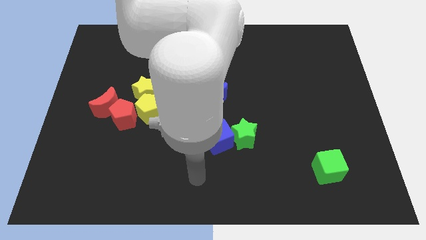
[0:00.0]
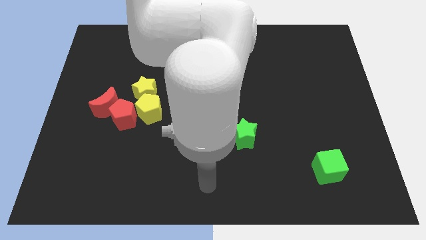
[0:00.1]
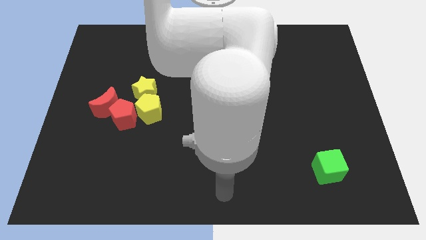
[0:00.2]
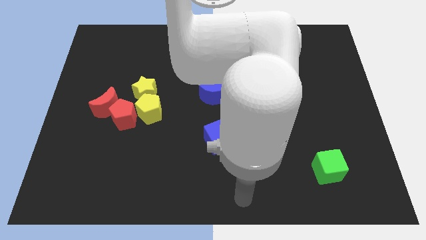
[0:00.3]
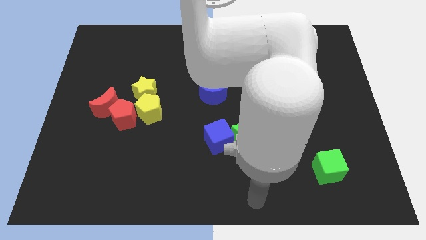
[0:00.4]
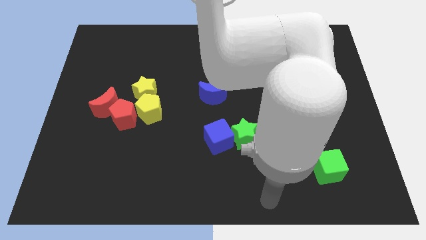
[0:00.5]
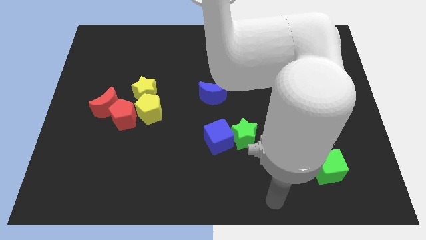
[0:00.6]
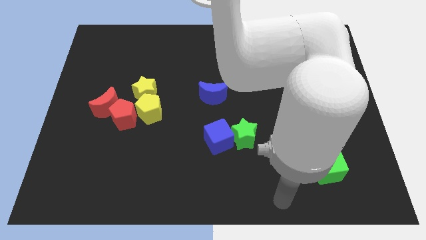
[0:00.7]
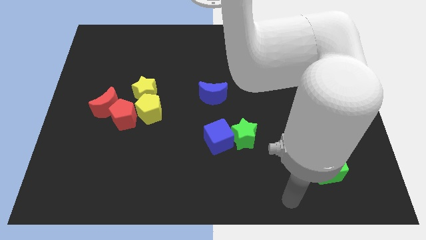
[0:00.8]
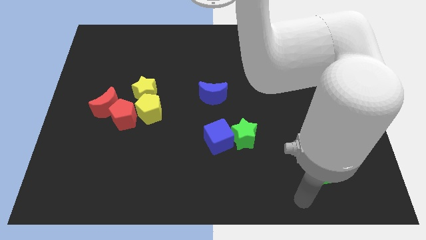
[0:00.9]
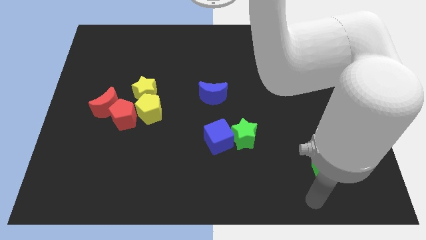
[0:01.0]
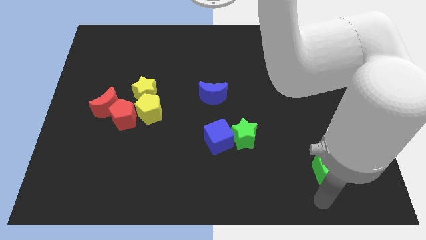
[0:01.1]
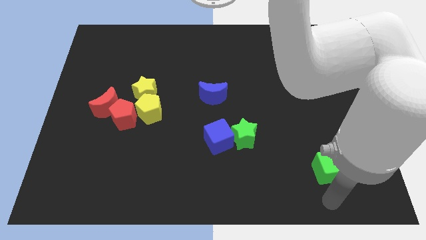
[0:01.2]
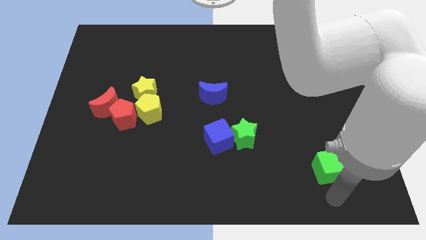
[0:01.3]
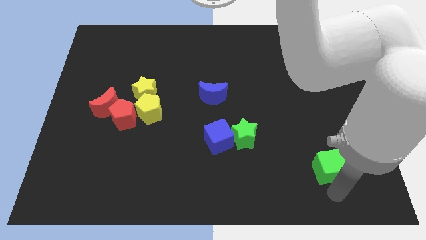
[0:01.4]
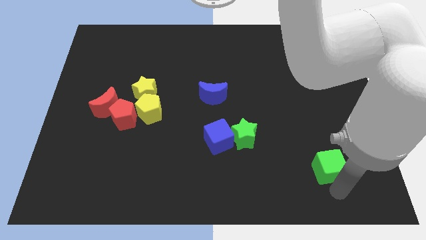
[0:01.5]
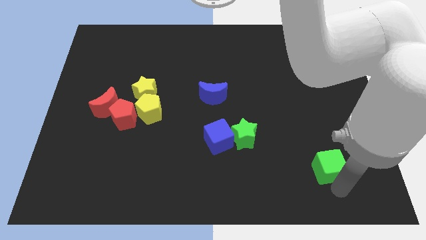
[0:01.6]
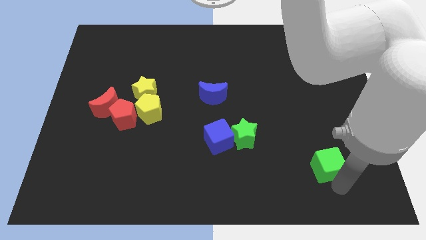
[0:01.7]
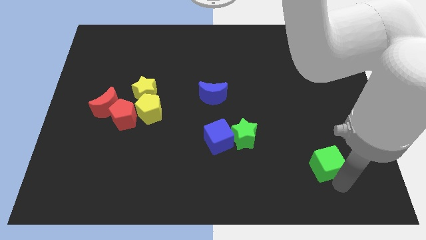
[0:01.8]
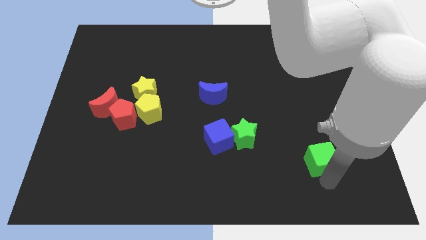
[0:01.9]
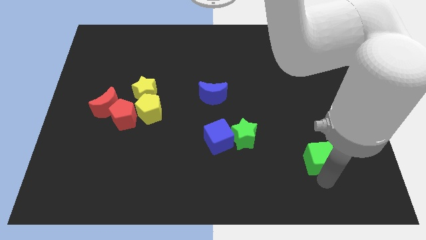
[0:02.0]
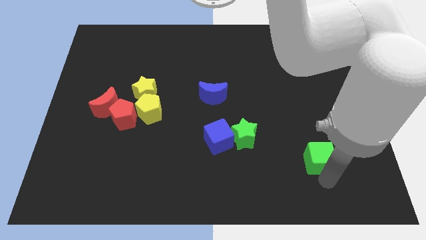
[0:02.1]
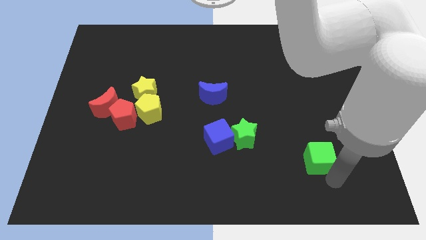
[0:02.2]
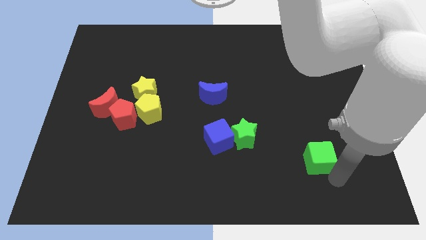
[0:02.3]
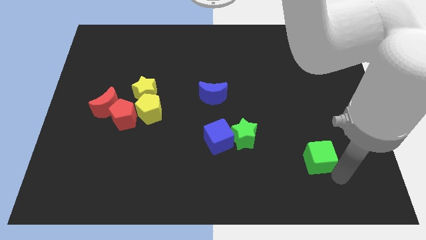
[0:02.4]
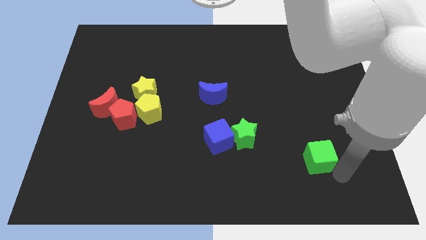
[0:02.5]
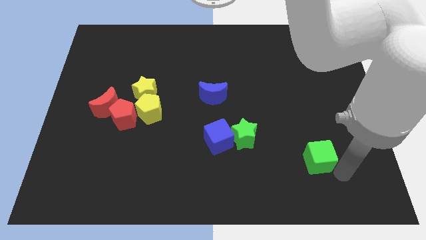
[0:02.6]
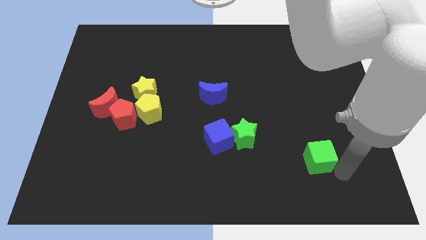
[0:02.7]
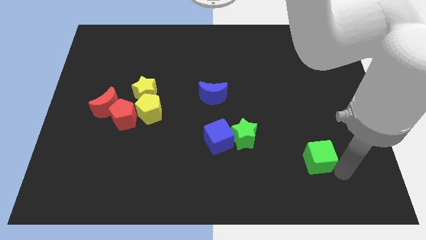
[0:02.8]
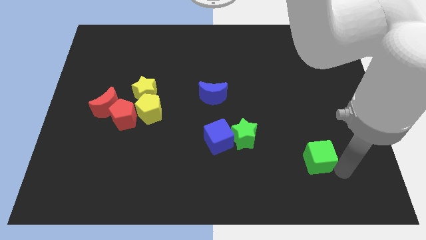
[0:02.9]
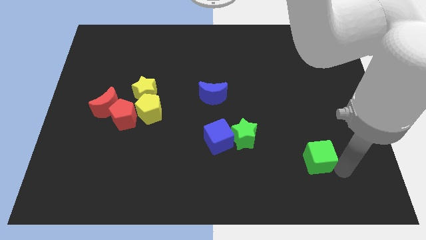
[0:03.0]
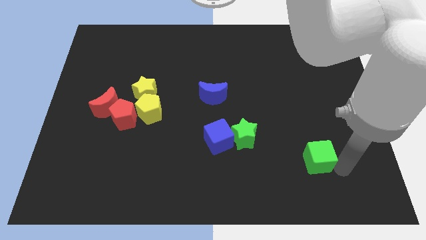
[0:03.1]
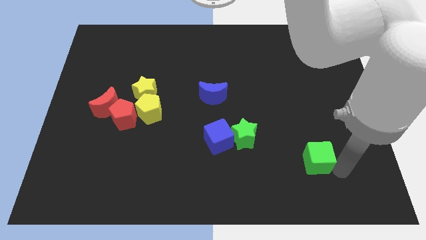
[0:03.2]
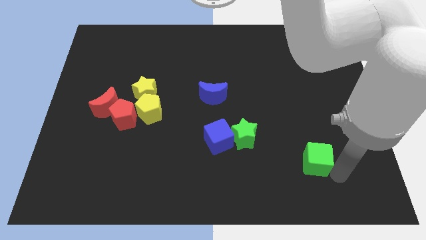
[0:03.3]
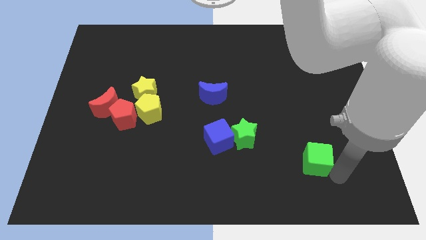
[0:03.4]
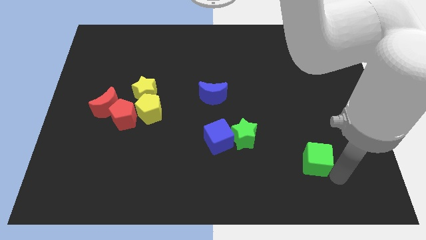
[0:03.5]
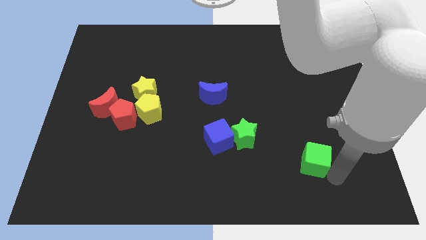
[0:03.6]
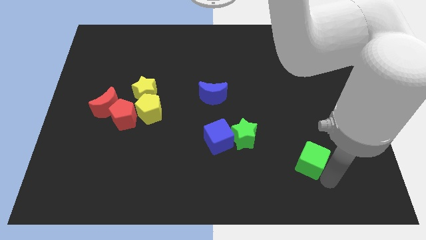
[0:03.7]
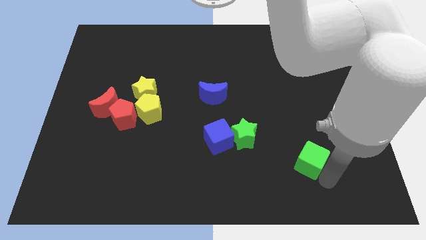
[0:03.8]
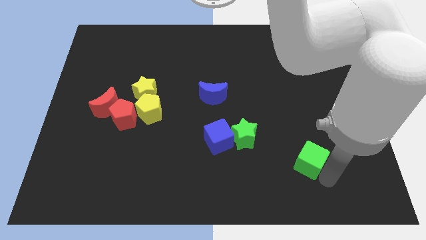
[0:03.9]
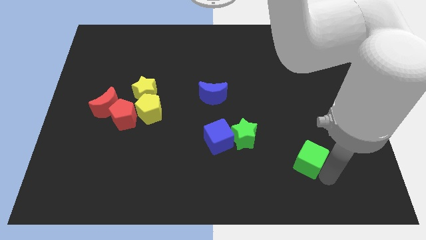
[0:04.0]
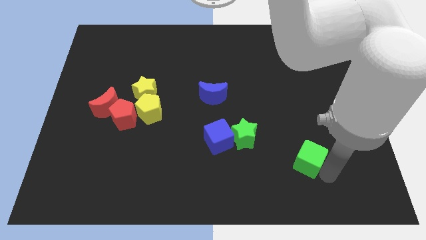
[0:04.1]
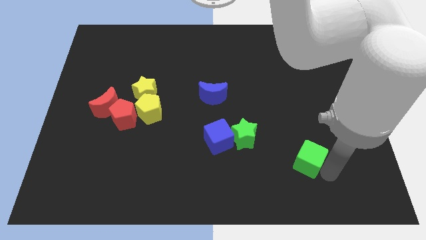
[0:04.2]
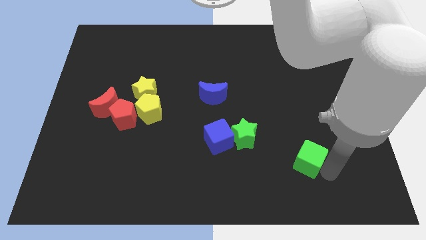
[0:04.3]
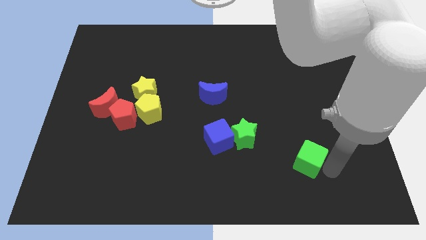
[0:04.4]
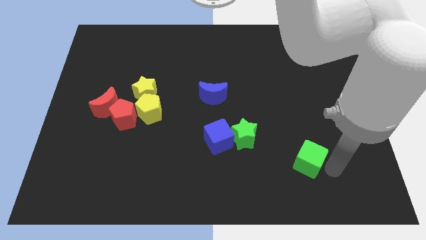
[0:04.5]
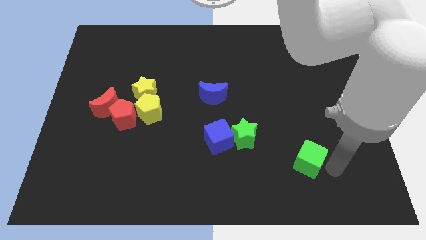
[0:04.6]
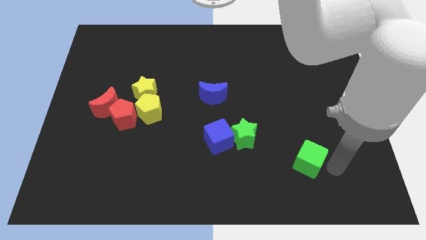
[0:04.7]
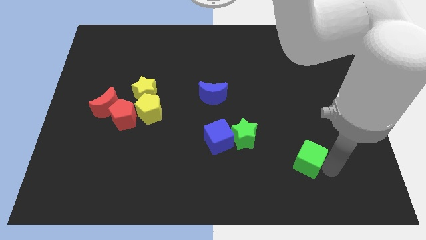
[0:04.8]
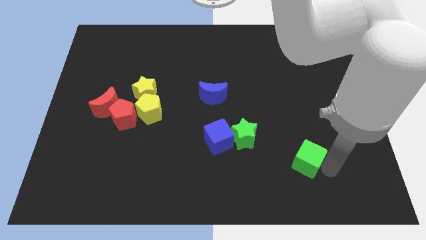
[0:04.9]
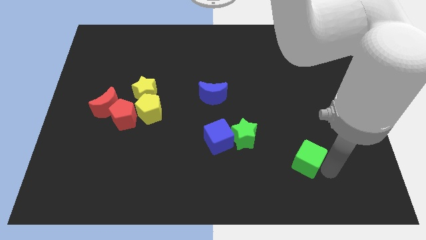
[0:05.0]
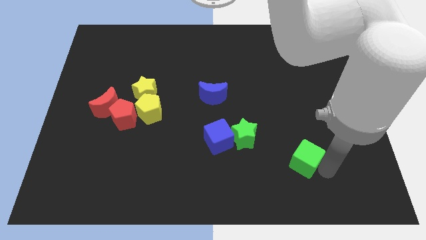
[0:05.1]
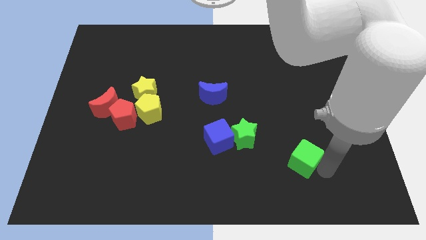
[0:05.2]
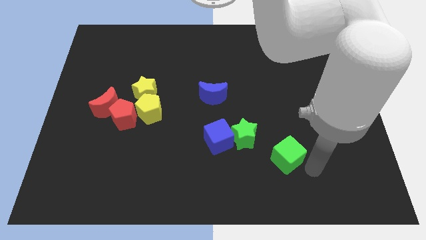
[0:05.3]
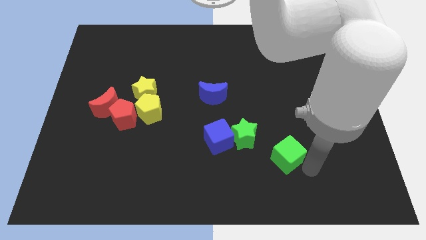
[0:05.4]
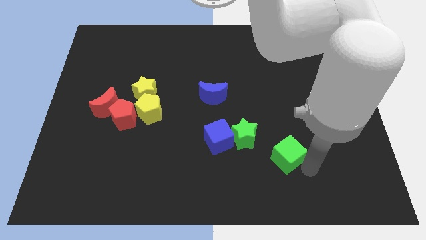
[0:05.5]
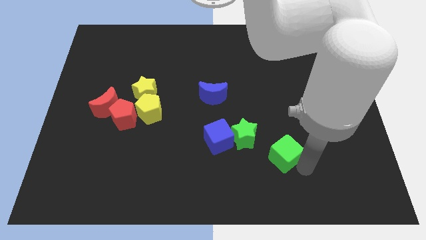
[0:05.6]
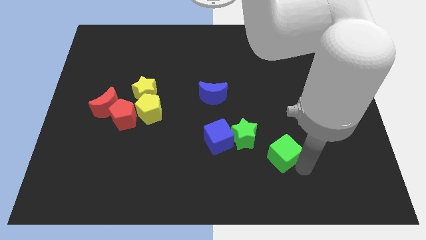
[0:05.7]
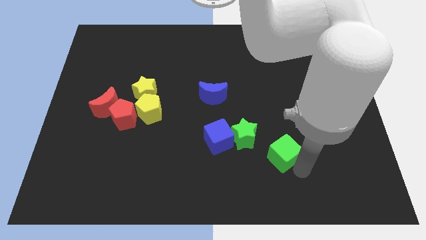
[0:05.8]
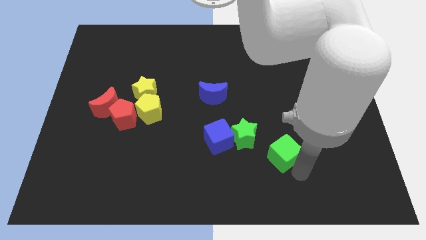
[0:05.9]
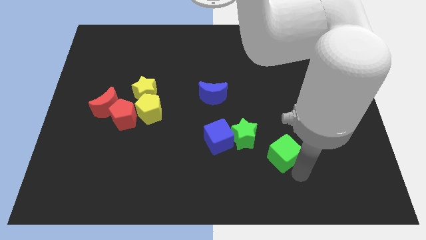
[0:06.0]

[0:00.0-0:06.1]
push the green cube towards the green star

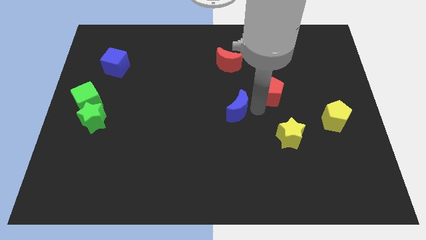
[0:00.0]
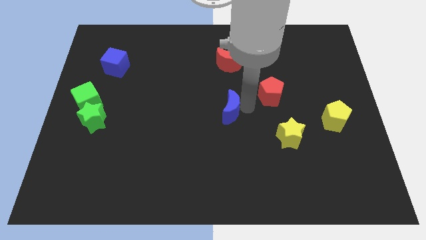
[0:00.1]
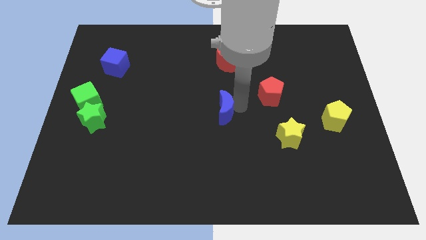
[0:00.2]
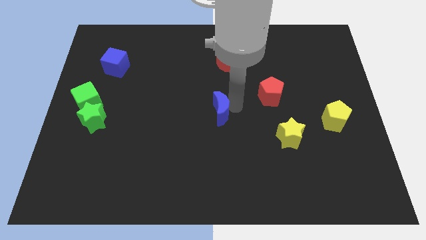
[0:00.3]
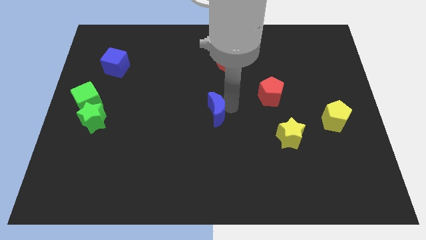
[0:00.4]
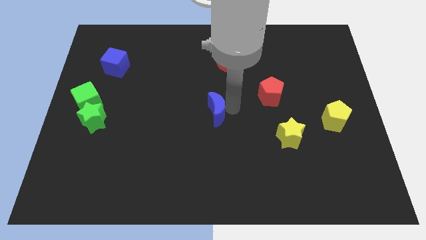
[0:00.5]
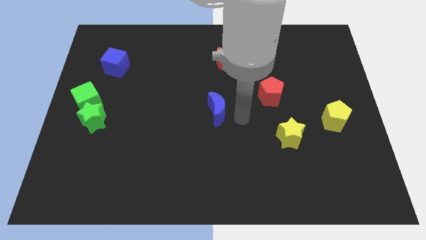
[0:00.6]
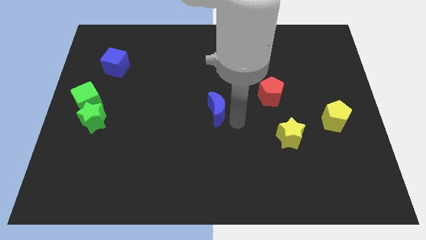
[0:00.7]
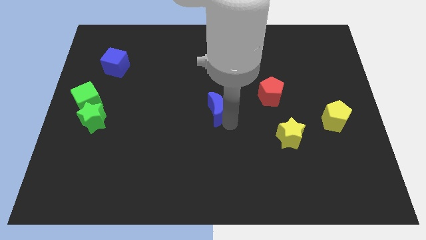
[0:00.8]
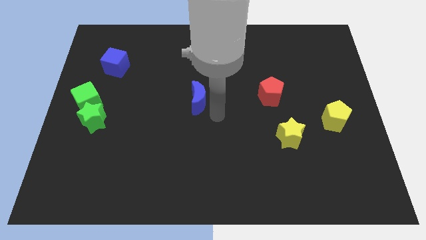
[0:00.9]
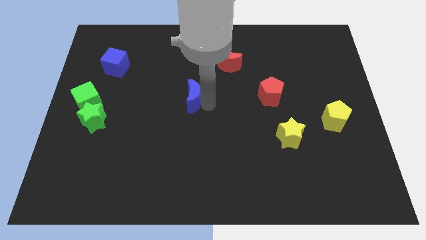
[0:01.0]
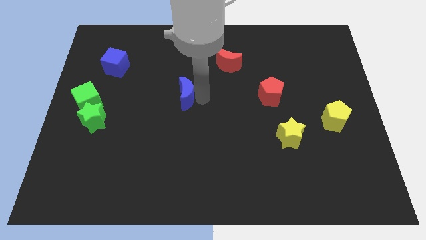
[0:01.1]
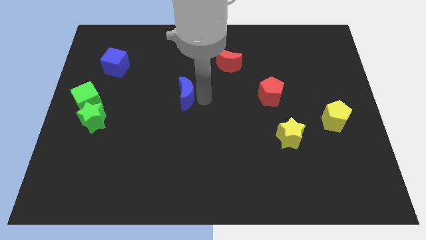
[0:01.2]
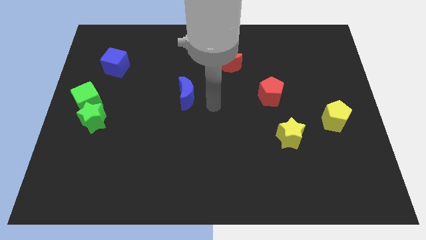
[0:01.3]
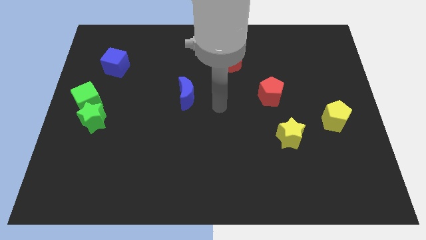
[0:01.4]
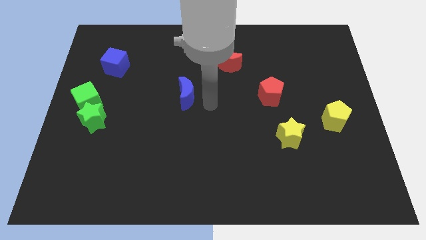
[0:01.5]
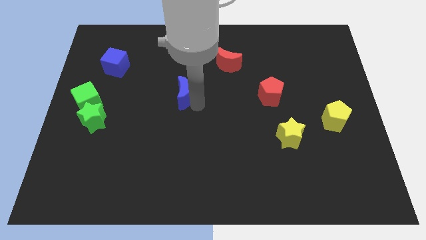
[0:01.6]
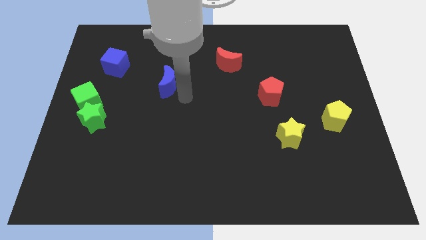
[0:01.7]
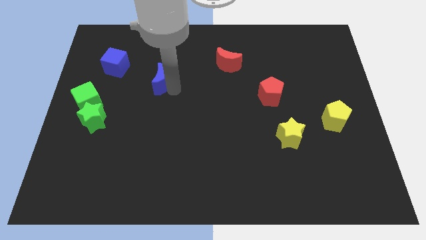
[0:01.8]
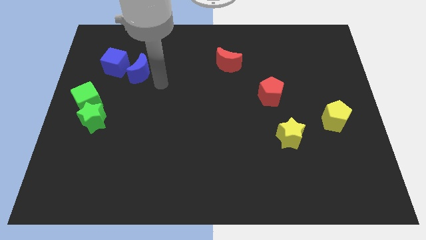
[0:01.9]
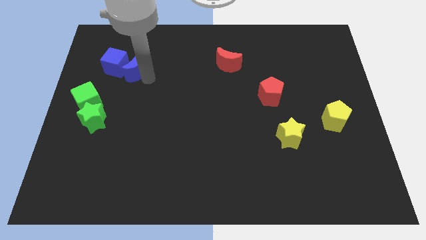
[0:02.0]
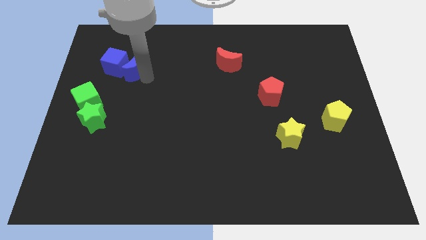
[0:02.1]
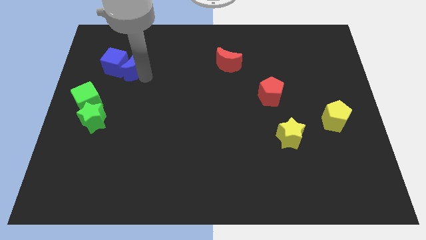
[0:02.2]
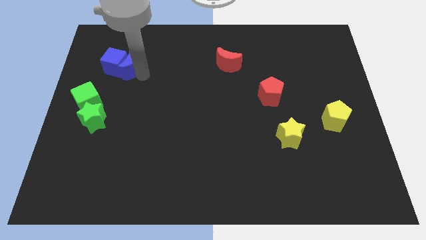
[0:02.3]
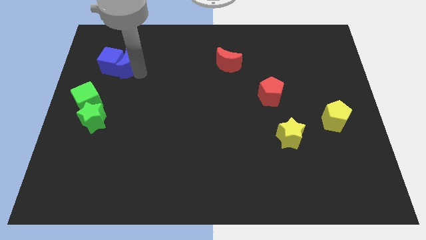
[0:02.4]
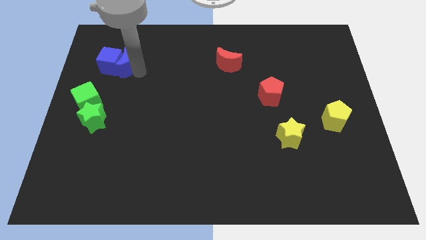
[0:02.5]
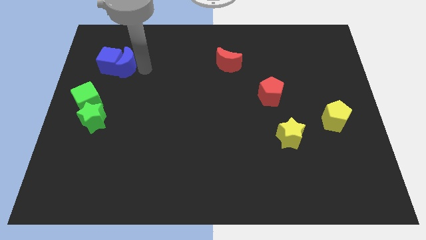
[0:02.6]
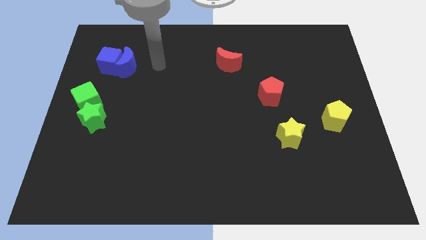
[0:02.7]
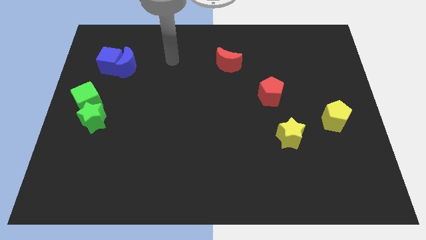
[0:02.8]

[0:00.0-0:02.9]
move the blue crescent to the right of the blue cube
